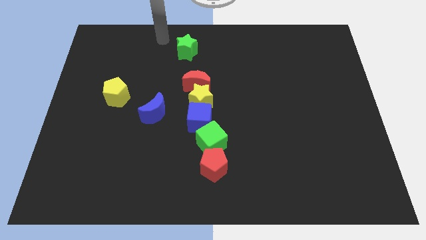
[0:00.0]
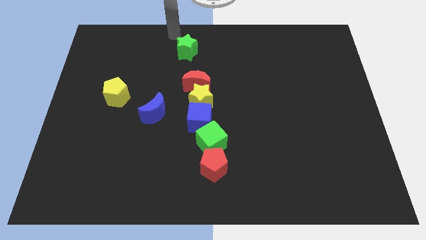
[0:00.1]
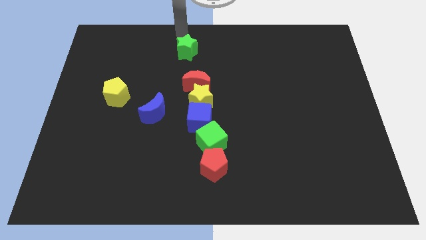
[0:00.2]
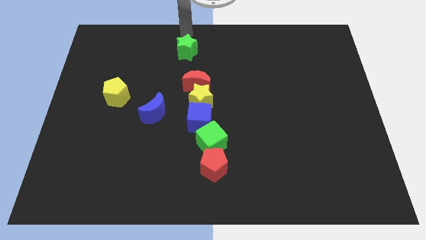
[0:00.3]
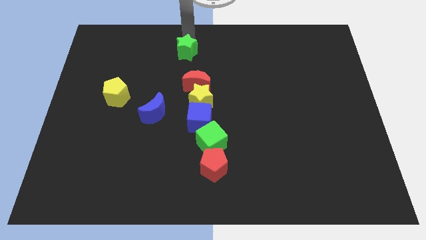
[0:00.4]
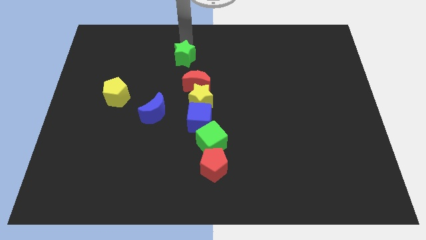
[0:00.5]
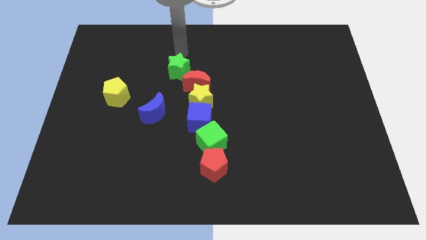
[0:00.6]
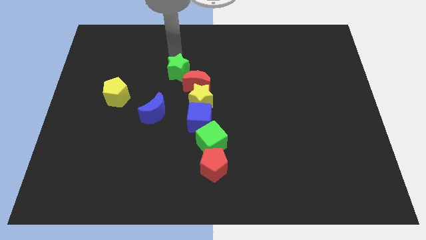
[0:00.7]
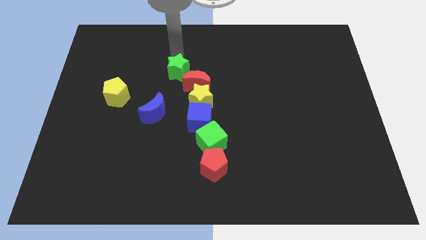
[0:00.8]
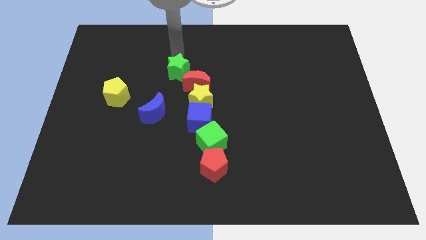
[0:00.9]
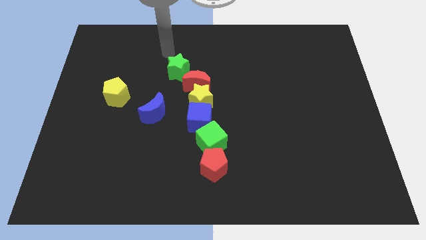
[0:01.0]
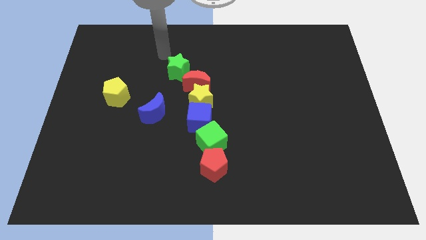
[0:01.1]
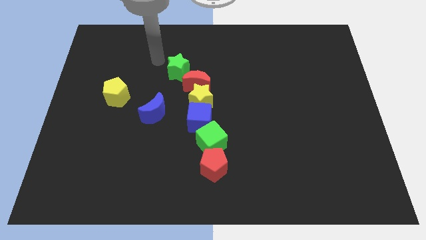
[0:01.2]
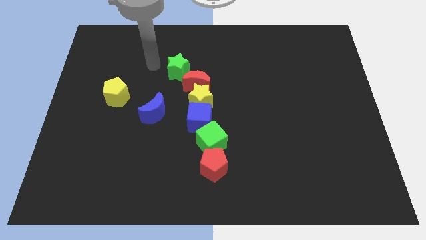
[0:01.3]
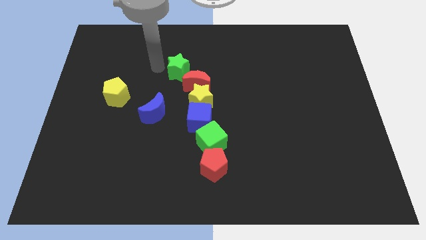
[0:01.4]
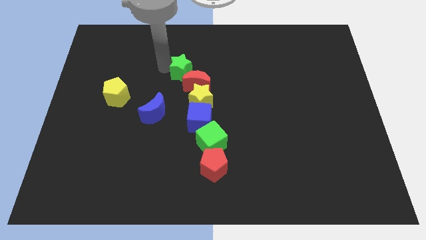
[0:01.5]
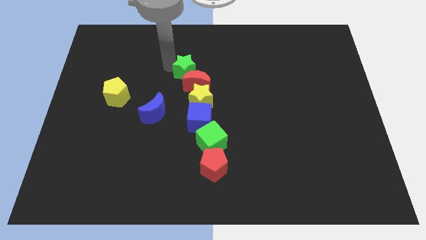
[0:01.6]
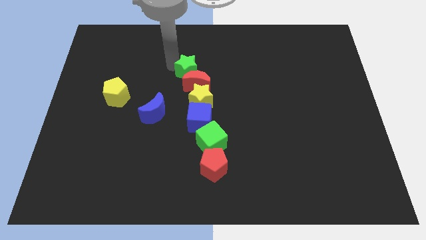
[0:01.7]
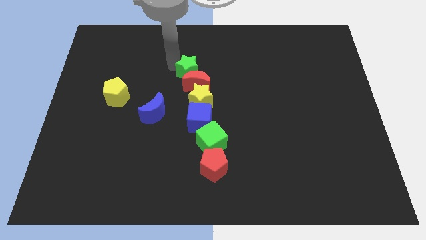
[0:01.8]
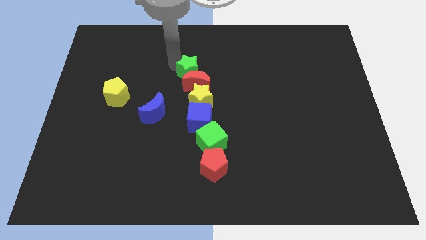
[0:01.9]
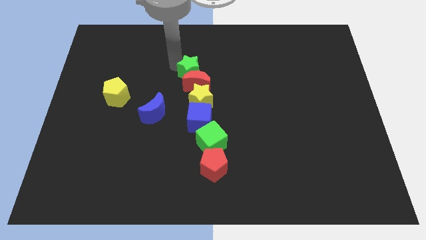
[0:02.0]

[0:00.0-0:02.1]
move the green star close to the top of red moon

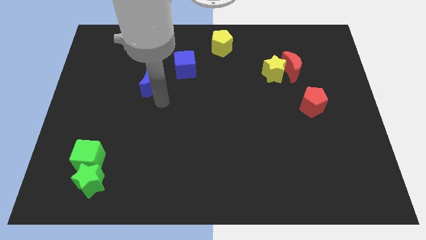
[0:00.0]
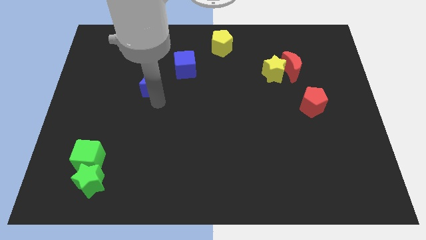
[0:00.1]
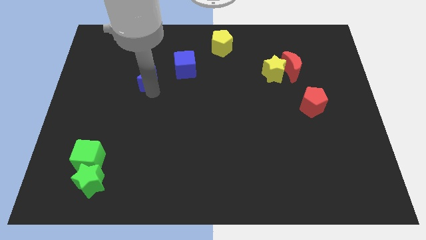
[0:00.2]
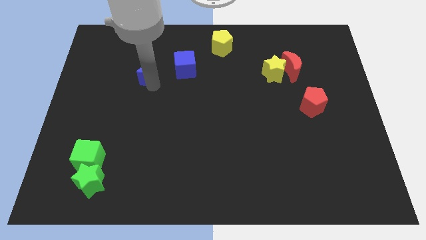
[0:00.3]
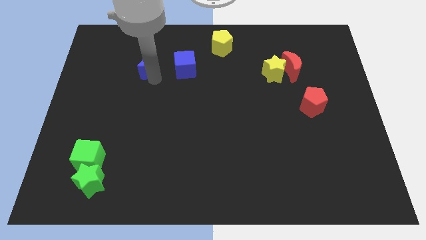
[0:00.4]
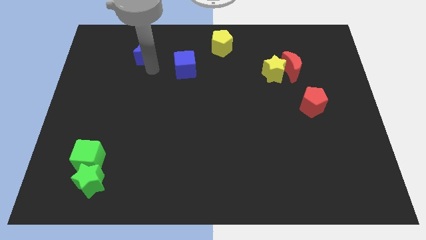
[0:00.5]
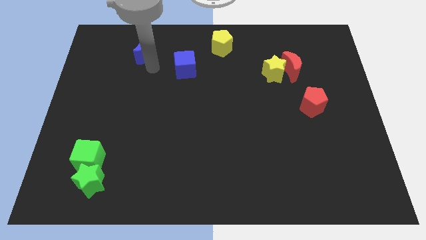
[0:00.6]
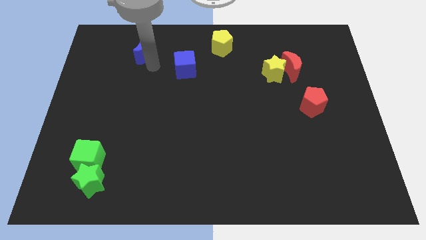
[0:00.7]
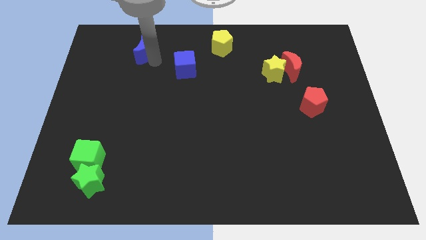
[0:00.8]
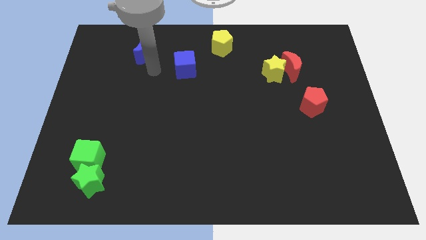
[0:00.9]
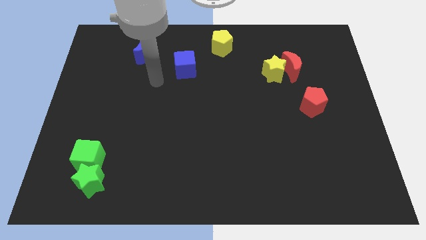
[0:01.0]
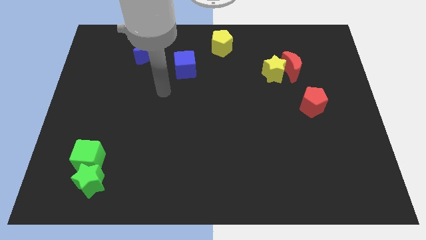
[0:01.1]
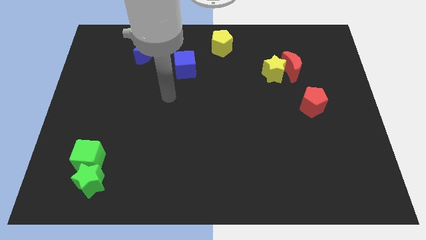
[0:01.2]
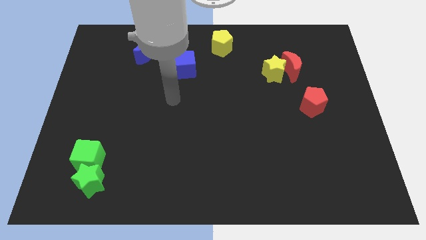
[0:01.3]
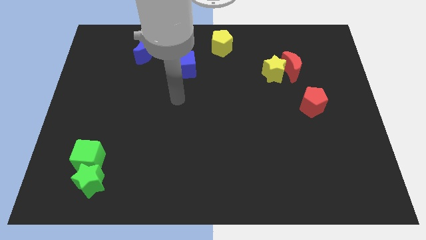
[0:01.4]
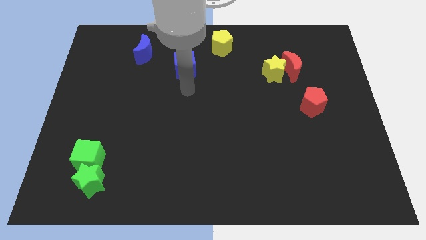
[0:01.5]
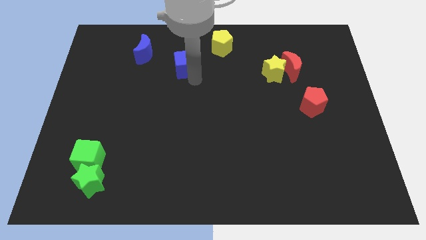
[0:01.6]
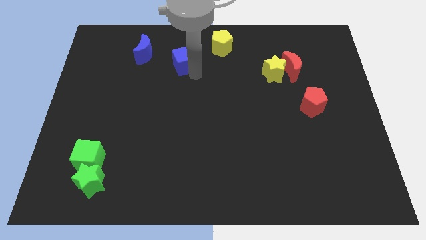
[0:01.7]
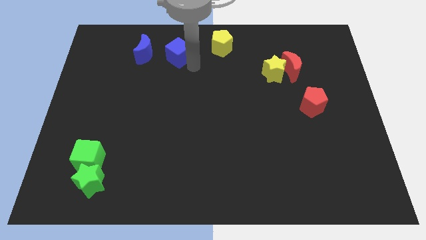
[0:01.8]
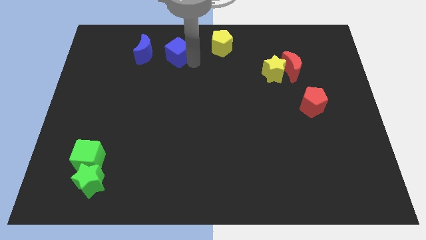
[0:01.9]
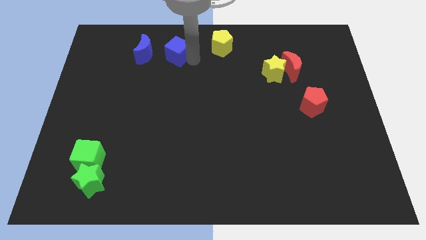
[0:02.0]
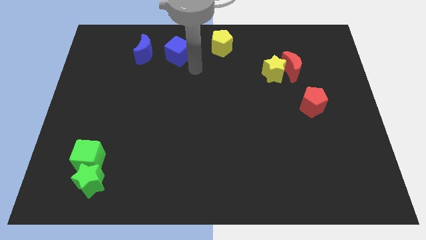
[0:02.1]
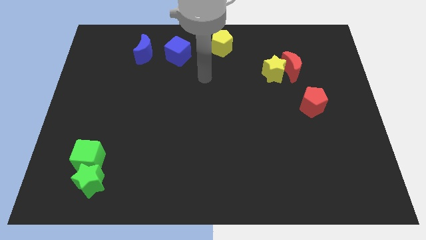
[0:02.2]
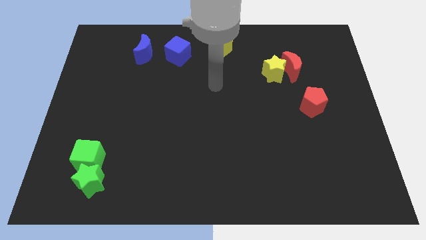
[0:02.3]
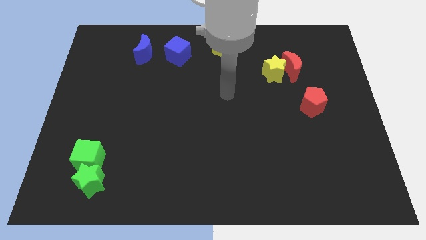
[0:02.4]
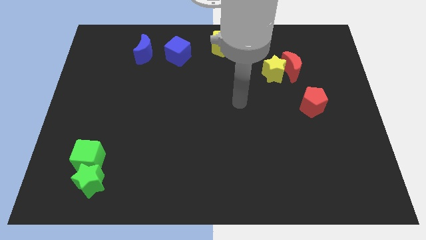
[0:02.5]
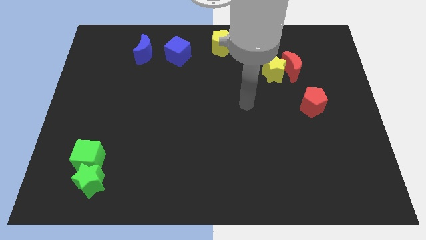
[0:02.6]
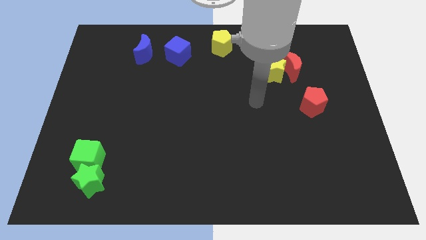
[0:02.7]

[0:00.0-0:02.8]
move the blue crescent and the blue cube towards top

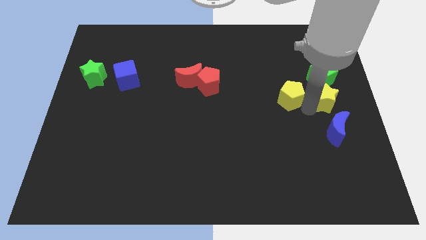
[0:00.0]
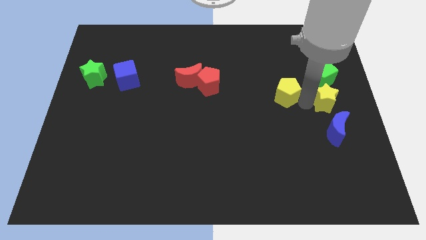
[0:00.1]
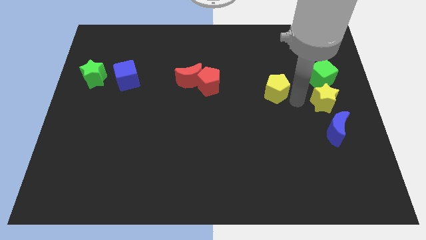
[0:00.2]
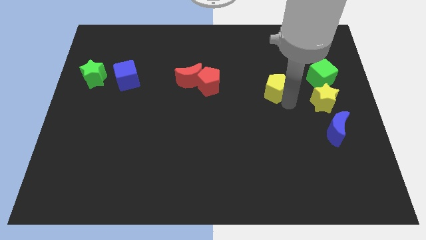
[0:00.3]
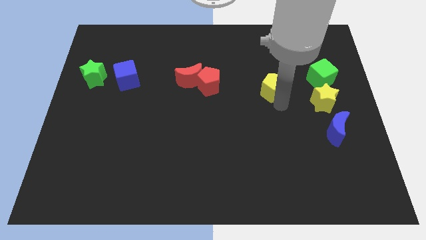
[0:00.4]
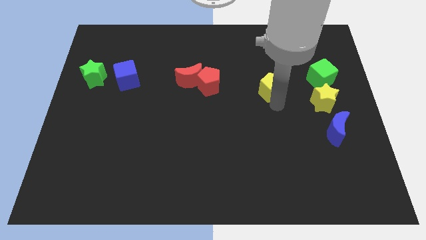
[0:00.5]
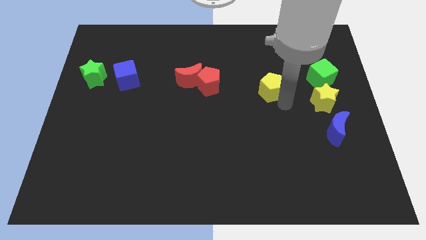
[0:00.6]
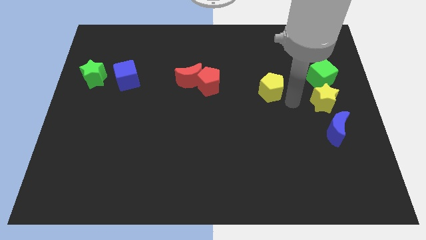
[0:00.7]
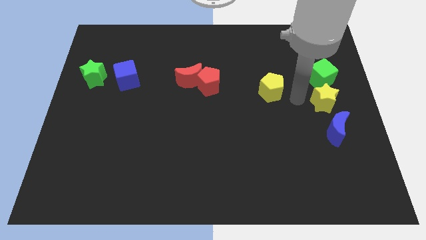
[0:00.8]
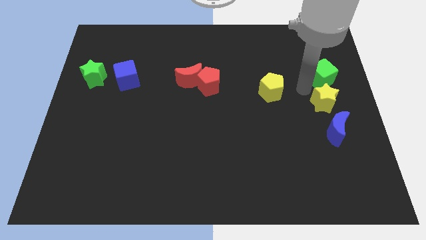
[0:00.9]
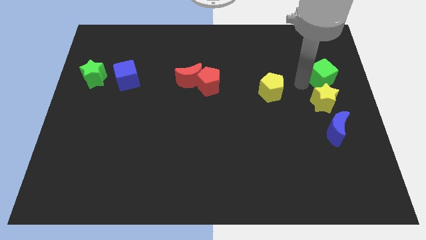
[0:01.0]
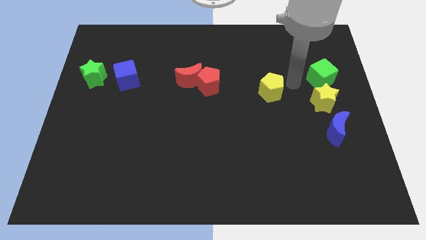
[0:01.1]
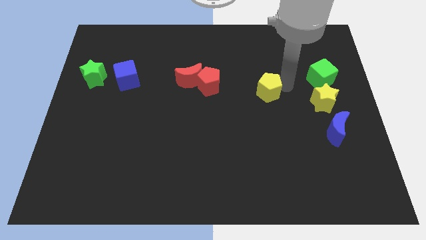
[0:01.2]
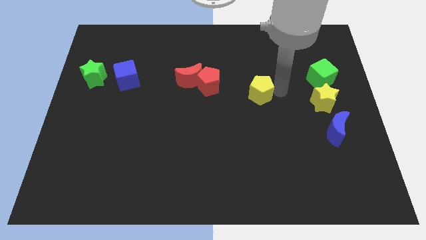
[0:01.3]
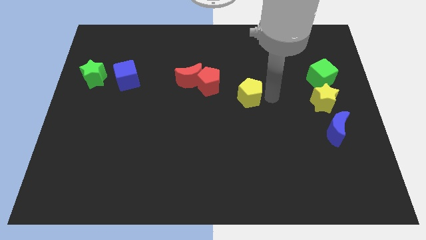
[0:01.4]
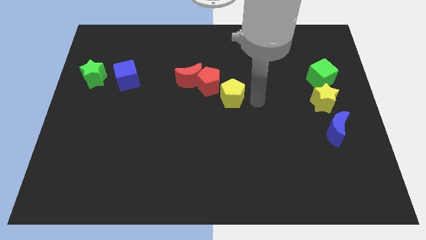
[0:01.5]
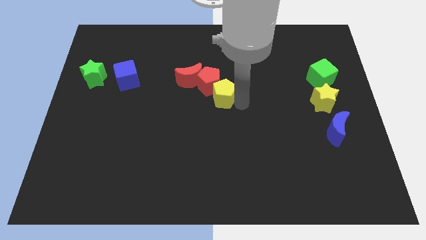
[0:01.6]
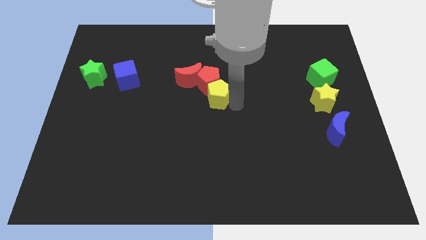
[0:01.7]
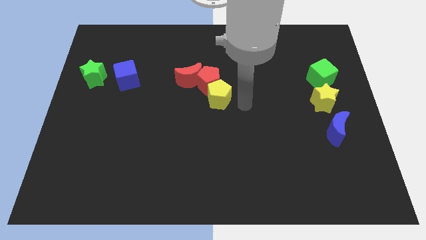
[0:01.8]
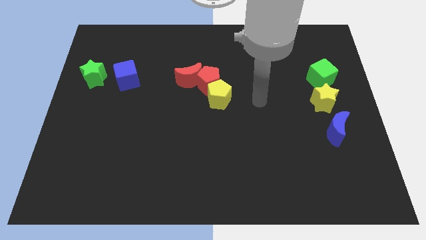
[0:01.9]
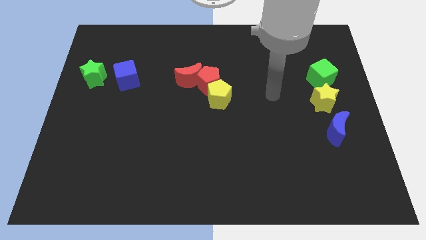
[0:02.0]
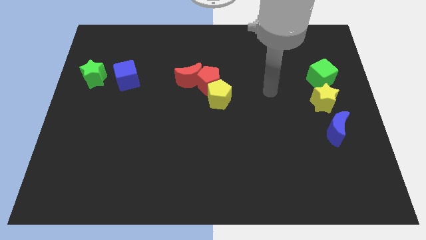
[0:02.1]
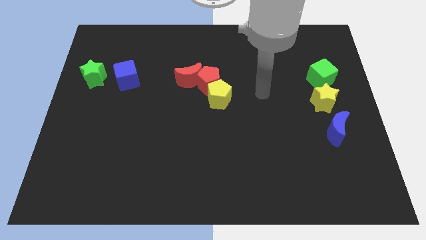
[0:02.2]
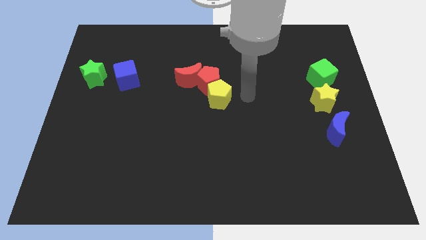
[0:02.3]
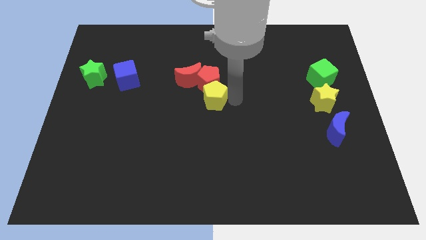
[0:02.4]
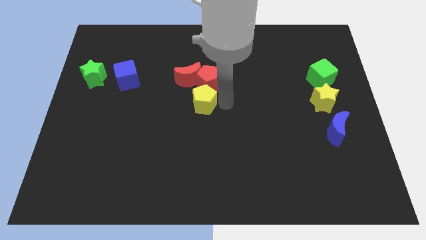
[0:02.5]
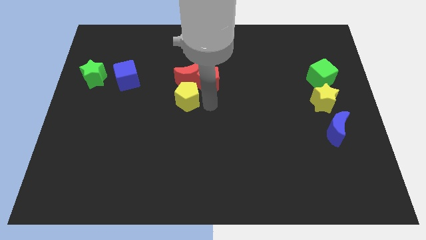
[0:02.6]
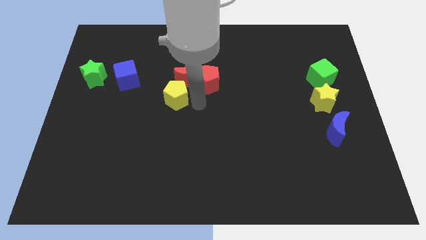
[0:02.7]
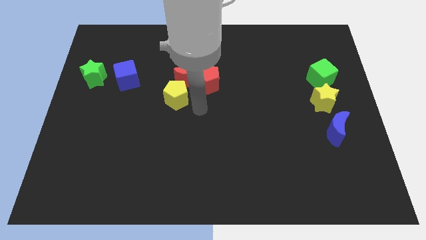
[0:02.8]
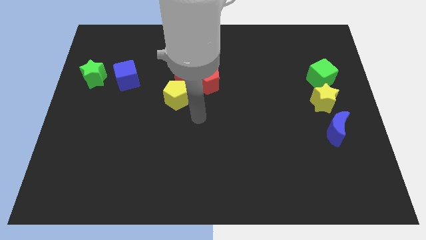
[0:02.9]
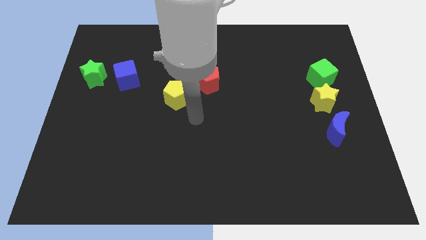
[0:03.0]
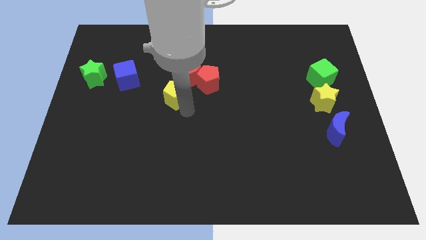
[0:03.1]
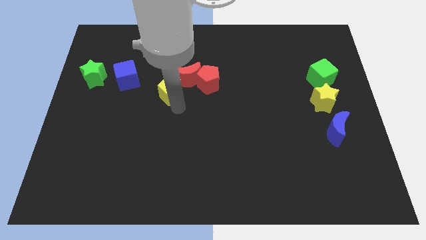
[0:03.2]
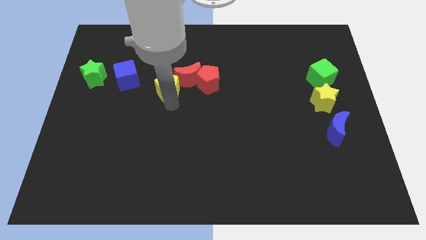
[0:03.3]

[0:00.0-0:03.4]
place the yellow pentagon at the left side of the red crescent

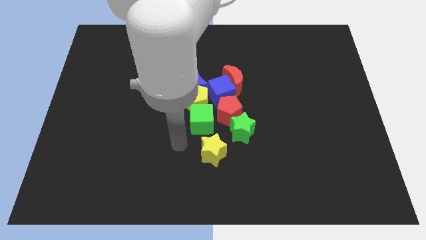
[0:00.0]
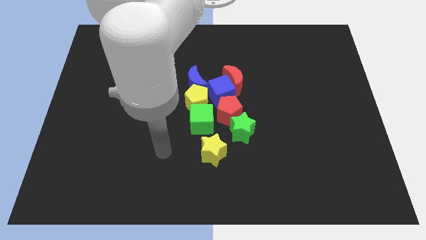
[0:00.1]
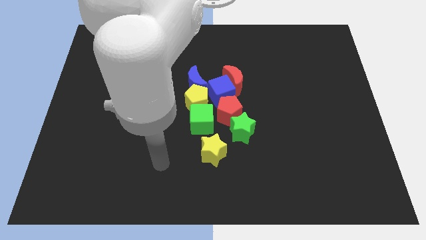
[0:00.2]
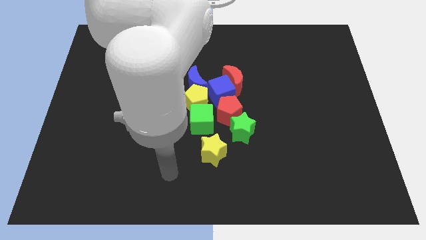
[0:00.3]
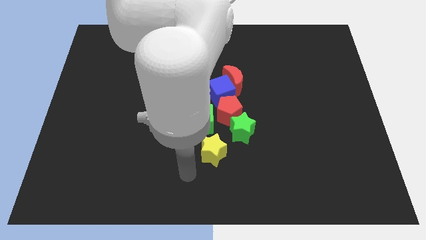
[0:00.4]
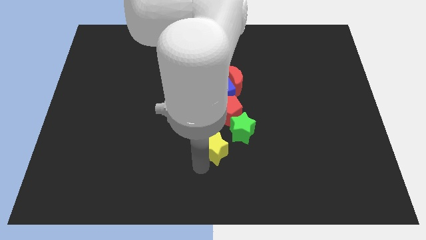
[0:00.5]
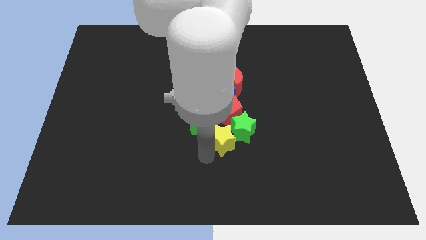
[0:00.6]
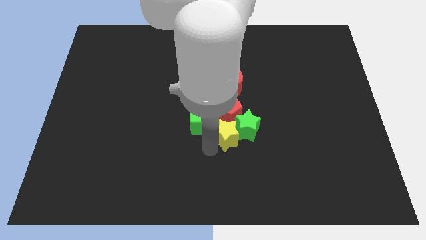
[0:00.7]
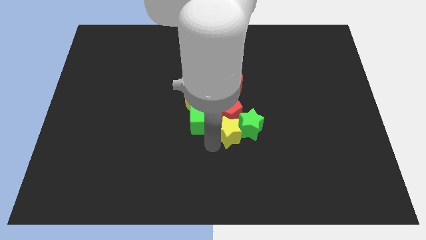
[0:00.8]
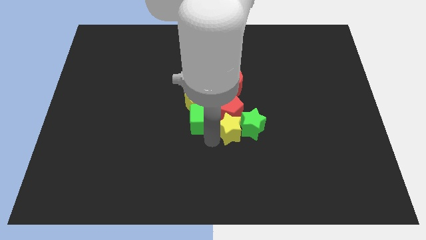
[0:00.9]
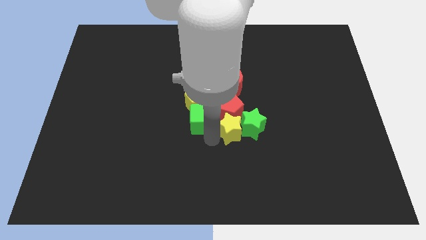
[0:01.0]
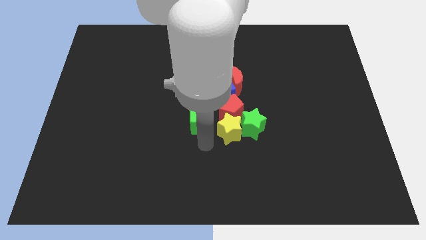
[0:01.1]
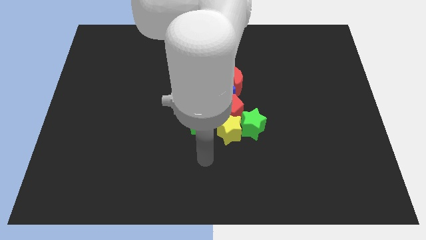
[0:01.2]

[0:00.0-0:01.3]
move the yellow star to the left side of the green star
